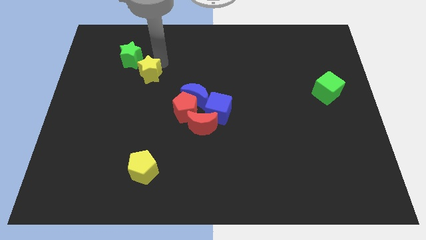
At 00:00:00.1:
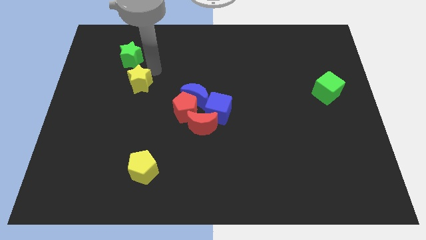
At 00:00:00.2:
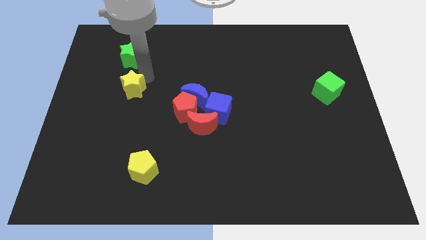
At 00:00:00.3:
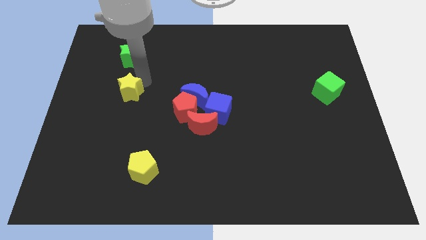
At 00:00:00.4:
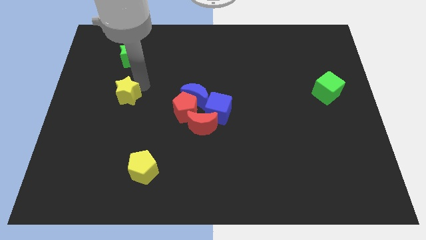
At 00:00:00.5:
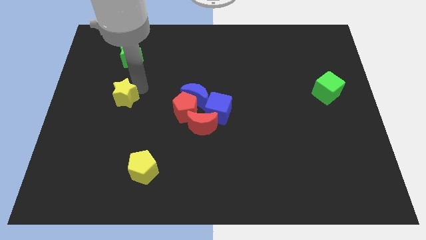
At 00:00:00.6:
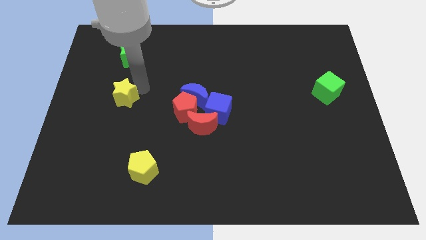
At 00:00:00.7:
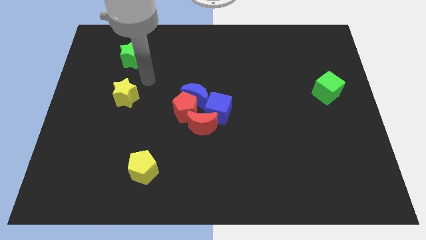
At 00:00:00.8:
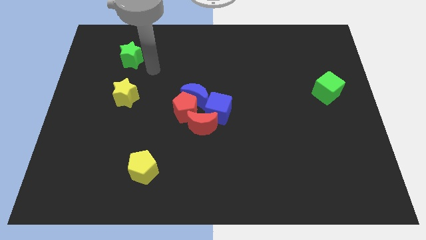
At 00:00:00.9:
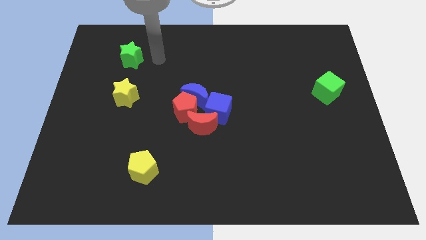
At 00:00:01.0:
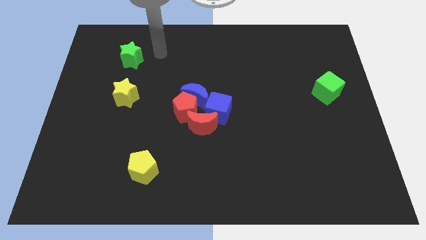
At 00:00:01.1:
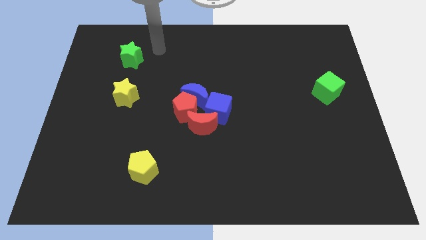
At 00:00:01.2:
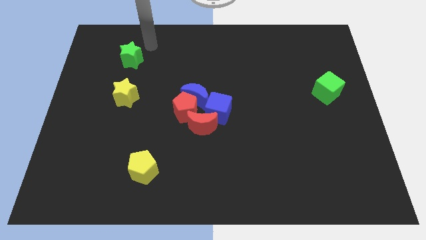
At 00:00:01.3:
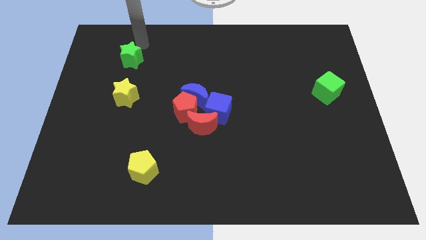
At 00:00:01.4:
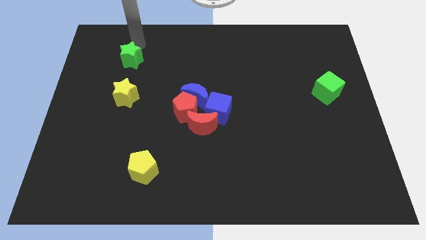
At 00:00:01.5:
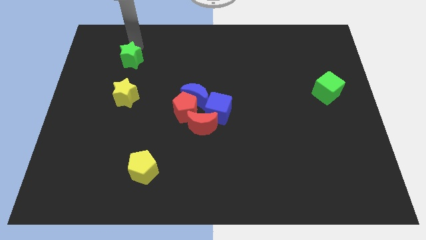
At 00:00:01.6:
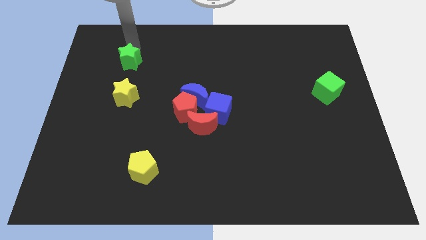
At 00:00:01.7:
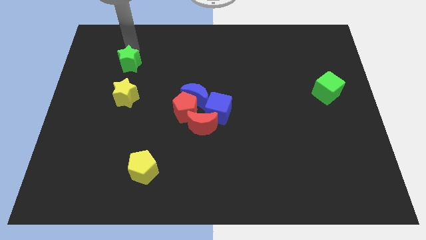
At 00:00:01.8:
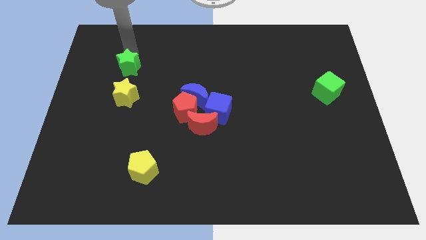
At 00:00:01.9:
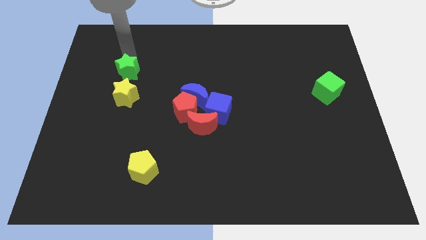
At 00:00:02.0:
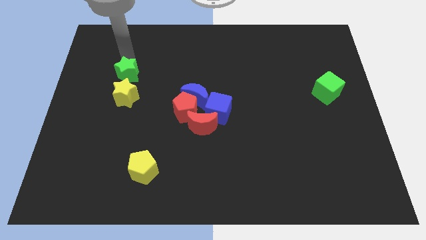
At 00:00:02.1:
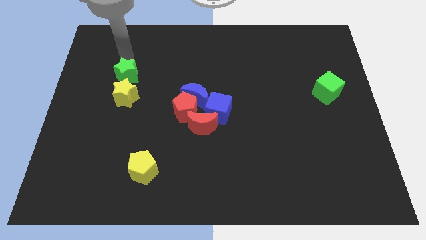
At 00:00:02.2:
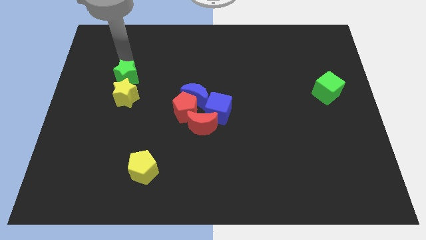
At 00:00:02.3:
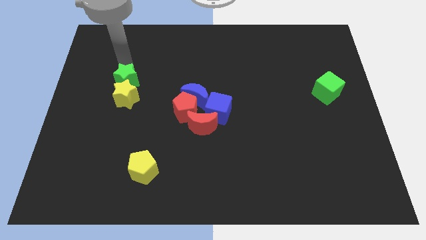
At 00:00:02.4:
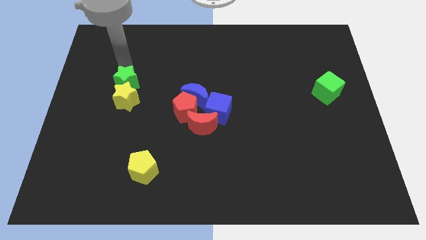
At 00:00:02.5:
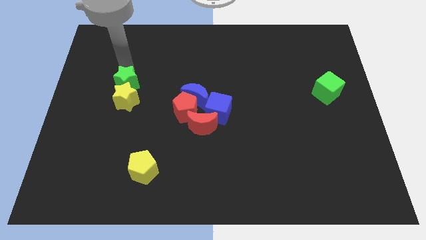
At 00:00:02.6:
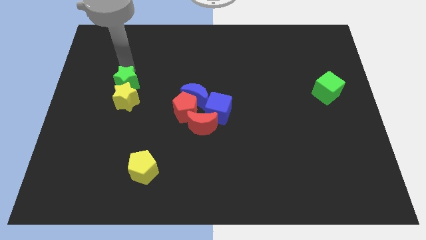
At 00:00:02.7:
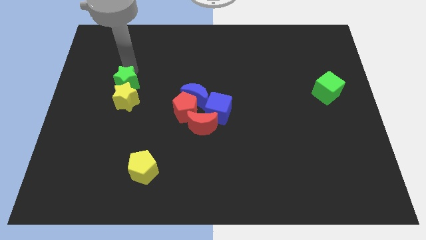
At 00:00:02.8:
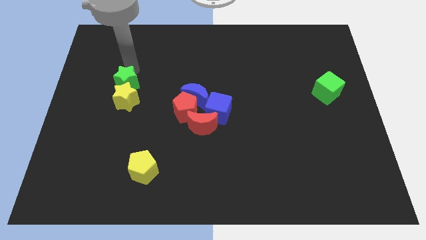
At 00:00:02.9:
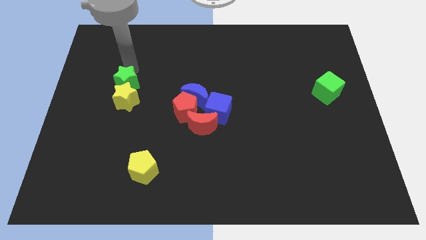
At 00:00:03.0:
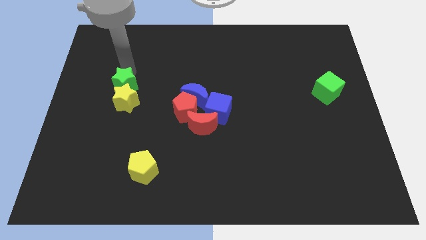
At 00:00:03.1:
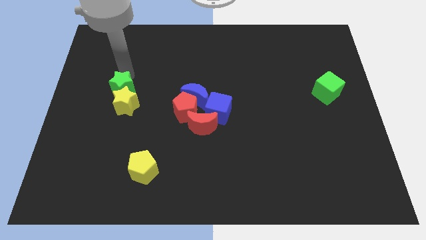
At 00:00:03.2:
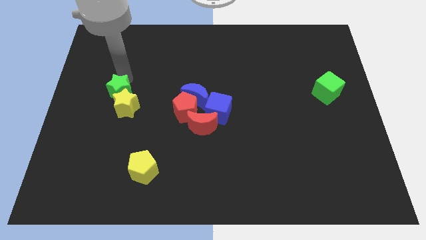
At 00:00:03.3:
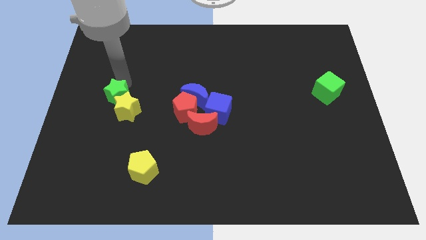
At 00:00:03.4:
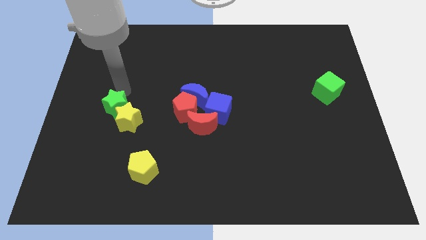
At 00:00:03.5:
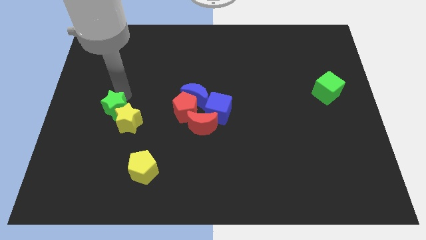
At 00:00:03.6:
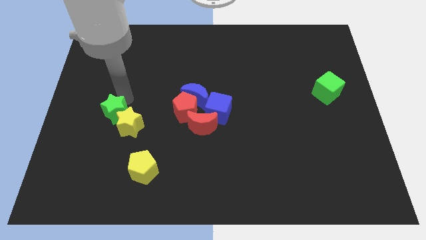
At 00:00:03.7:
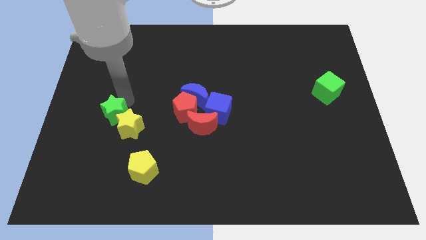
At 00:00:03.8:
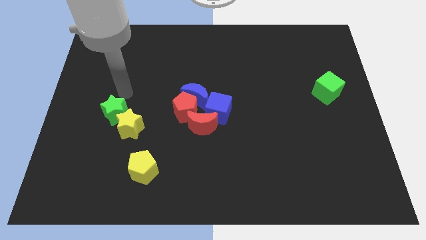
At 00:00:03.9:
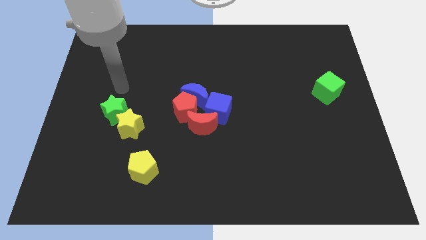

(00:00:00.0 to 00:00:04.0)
move the green star along with the yellow star left to the red pentagon

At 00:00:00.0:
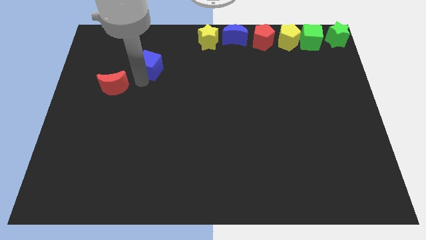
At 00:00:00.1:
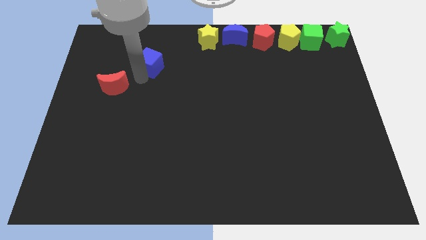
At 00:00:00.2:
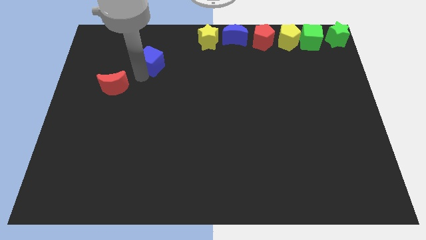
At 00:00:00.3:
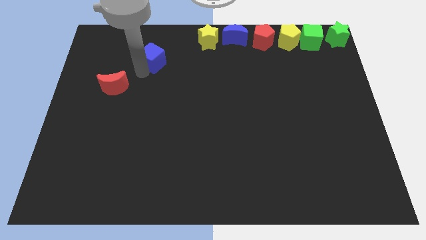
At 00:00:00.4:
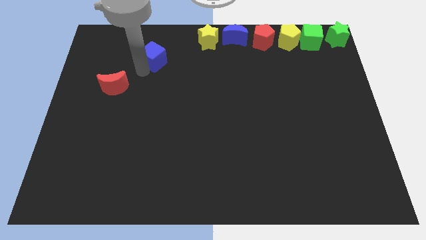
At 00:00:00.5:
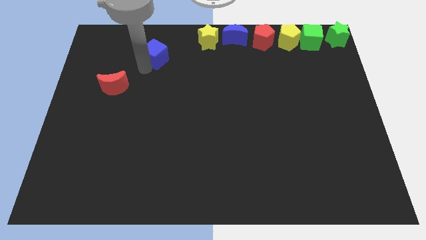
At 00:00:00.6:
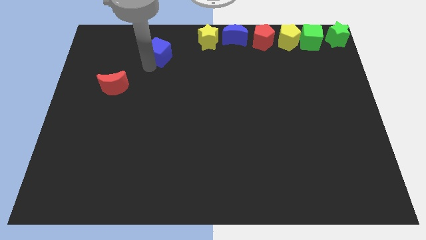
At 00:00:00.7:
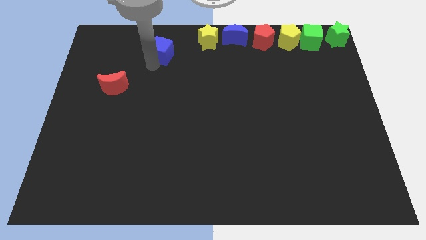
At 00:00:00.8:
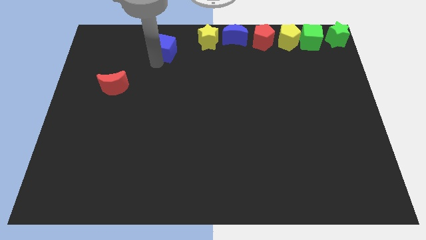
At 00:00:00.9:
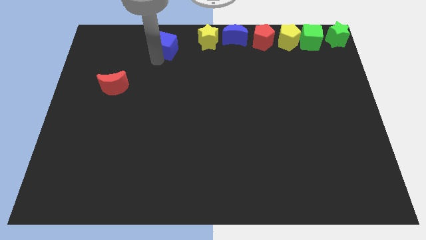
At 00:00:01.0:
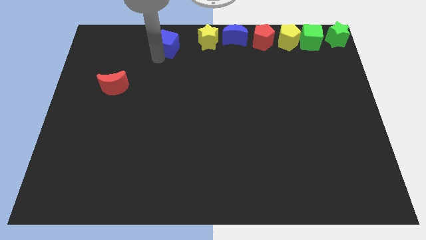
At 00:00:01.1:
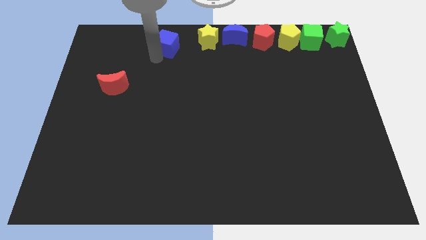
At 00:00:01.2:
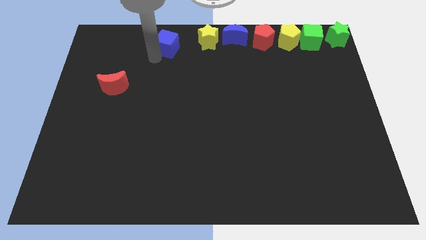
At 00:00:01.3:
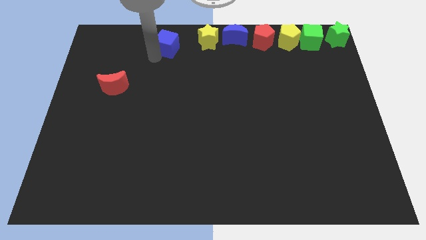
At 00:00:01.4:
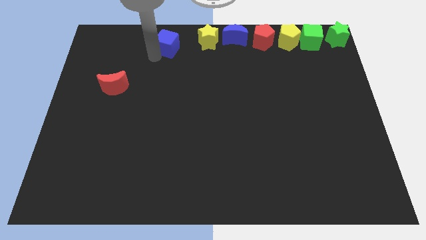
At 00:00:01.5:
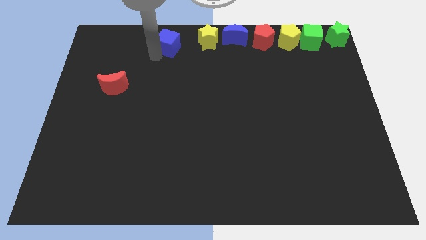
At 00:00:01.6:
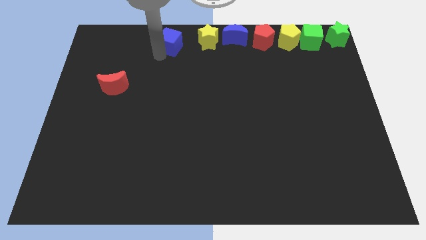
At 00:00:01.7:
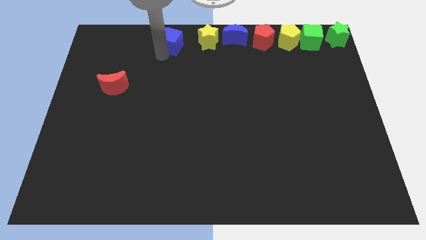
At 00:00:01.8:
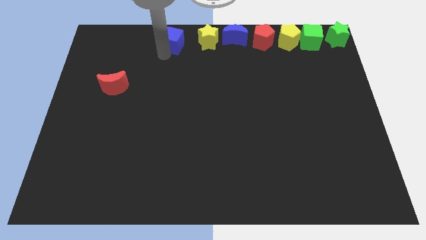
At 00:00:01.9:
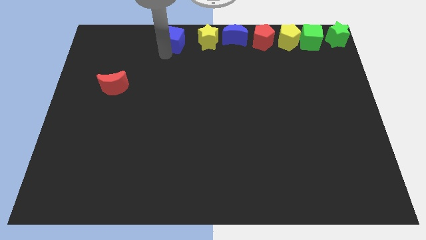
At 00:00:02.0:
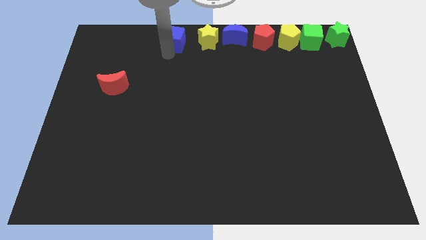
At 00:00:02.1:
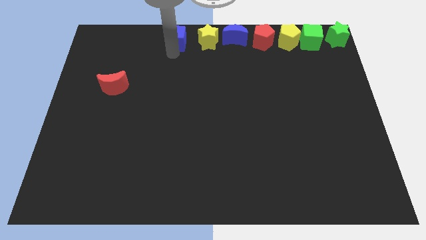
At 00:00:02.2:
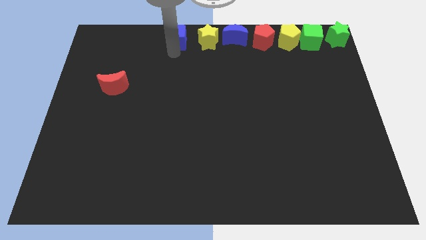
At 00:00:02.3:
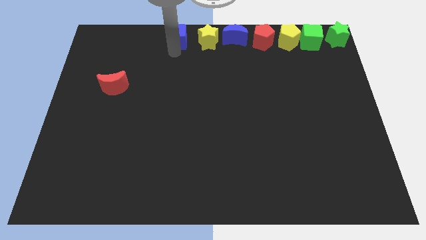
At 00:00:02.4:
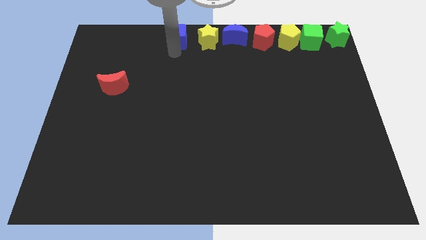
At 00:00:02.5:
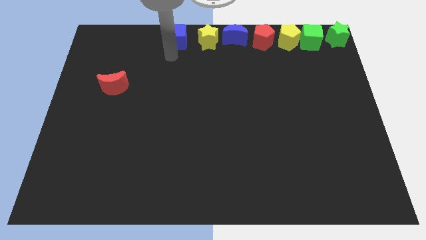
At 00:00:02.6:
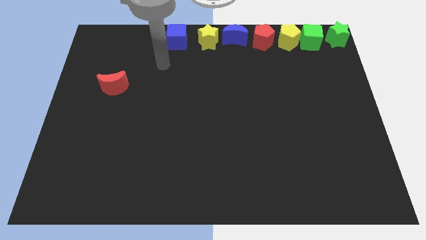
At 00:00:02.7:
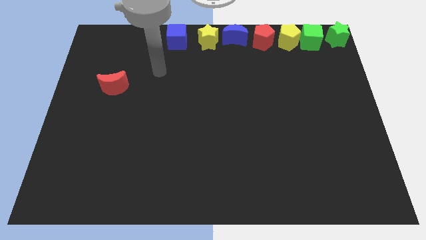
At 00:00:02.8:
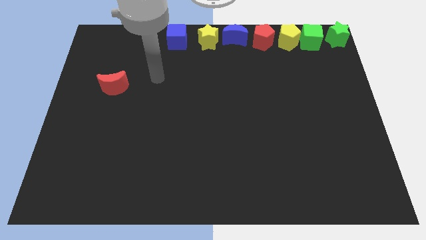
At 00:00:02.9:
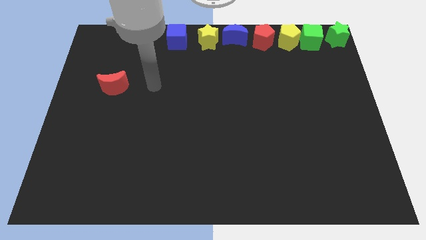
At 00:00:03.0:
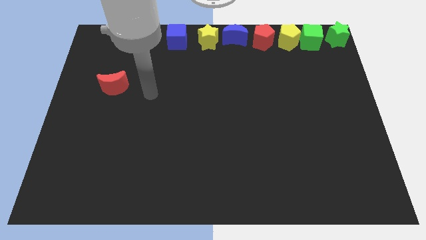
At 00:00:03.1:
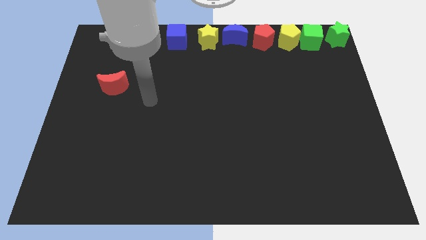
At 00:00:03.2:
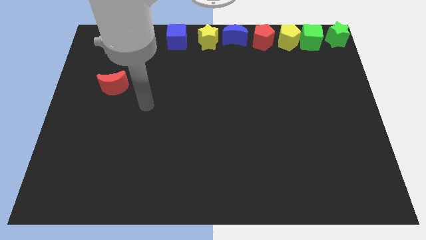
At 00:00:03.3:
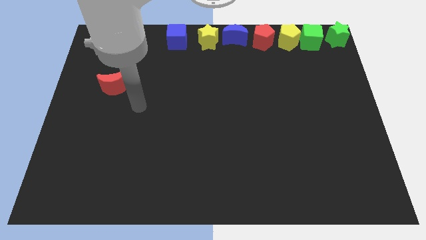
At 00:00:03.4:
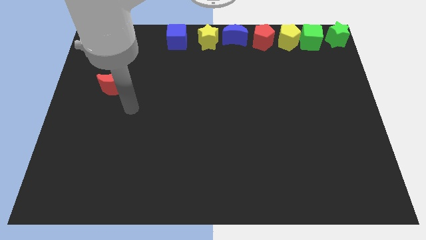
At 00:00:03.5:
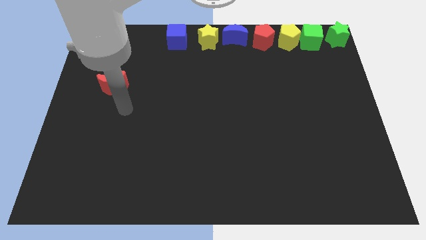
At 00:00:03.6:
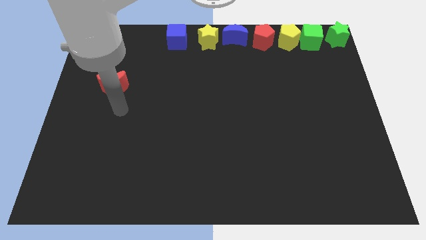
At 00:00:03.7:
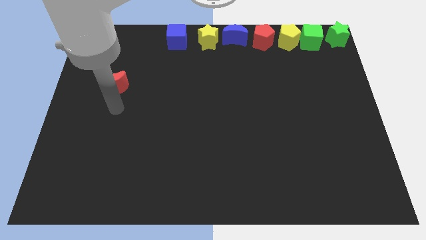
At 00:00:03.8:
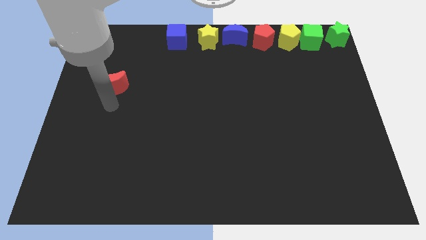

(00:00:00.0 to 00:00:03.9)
place the blue cube to the left of the yellow star

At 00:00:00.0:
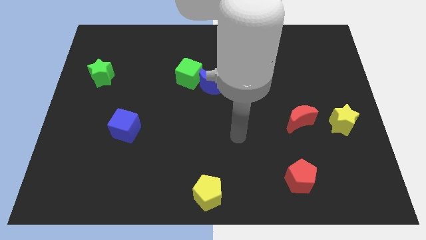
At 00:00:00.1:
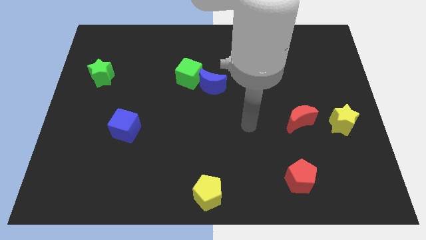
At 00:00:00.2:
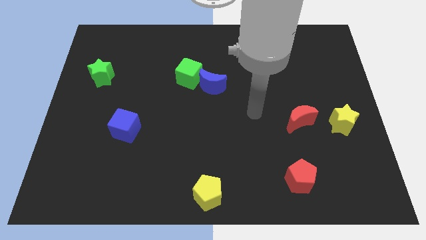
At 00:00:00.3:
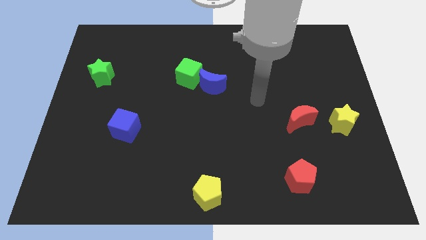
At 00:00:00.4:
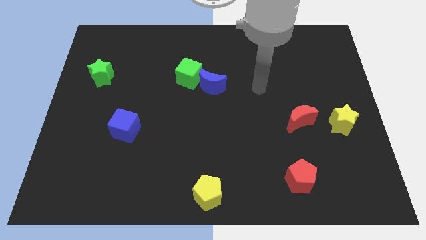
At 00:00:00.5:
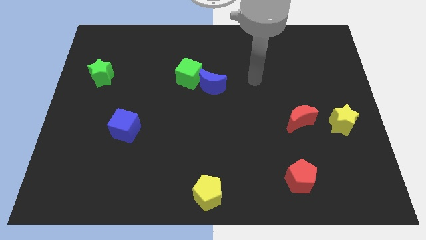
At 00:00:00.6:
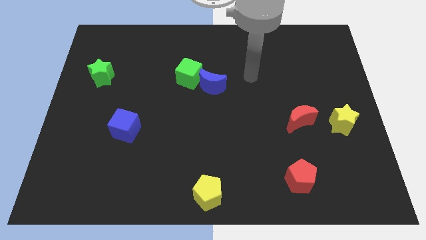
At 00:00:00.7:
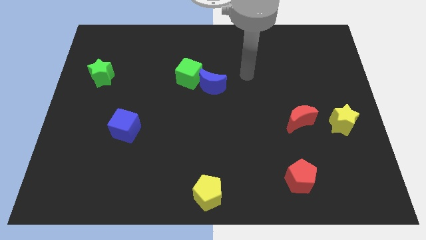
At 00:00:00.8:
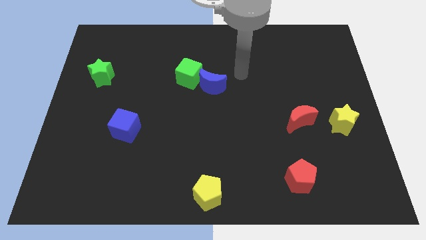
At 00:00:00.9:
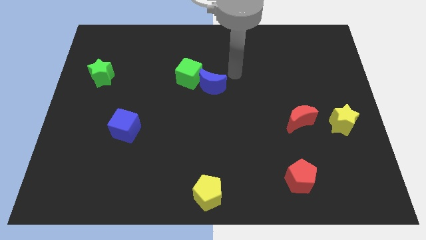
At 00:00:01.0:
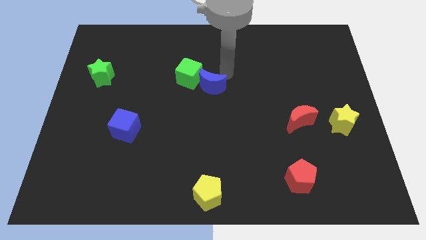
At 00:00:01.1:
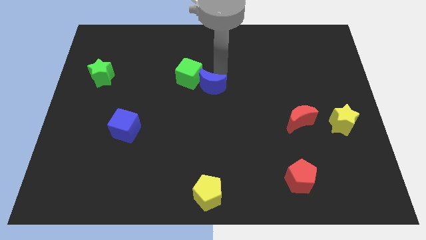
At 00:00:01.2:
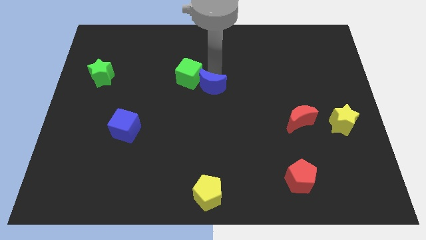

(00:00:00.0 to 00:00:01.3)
move your arm to the top of blue crescent
